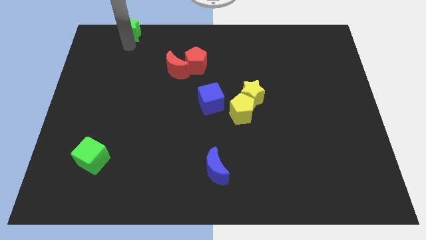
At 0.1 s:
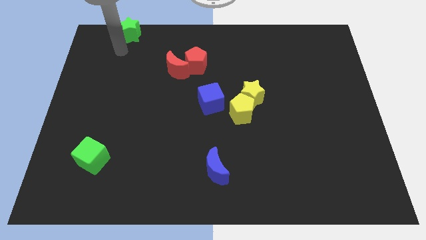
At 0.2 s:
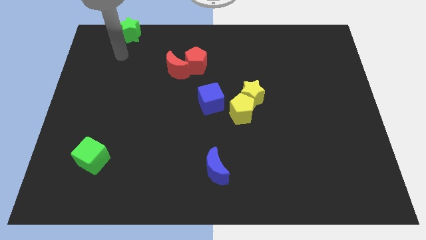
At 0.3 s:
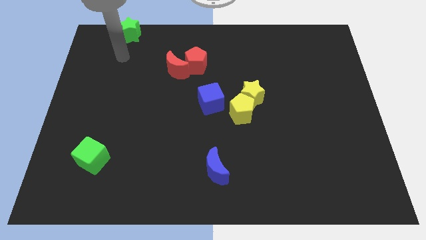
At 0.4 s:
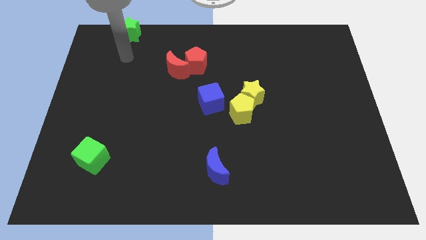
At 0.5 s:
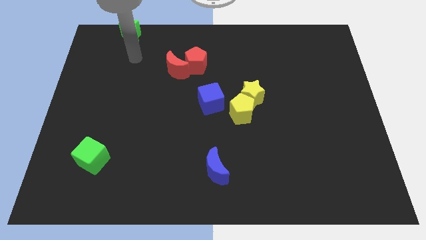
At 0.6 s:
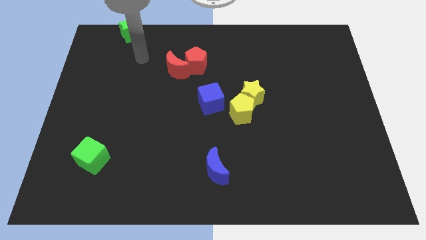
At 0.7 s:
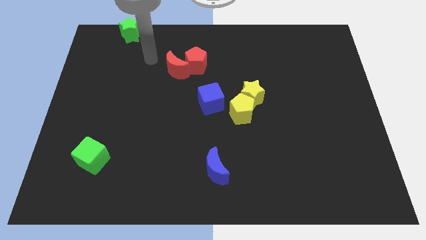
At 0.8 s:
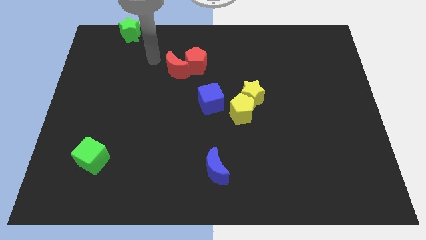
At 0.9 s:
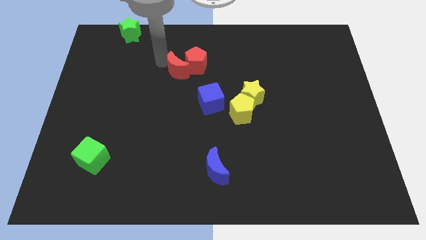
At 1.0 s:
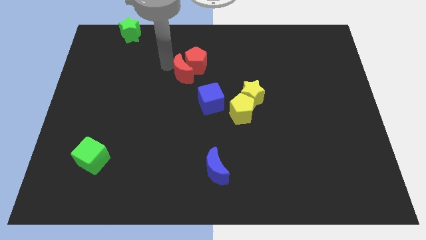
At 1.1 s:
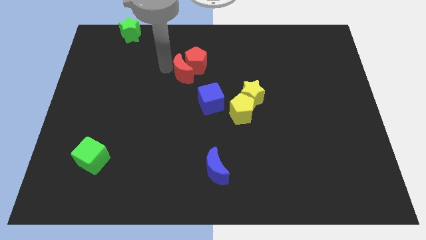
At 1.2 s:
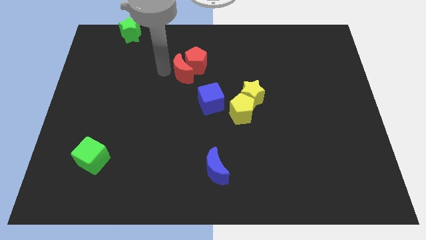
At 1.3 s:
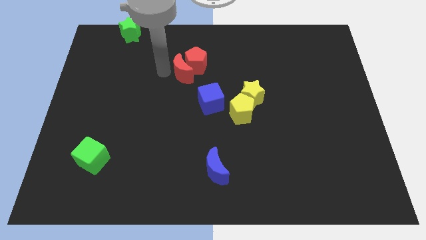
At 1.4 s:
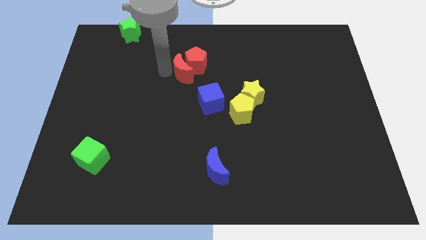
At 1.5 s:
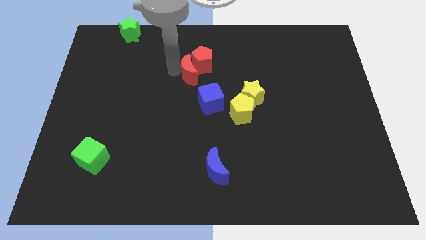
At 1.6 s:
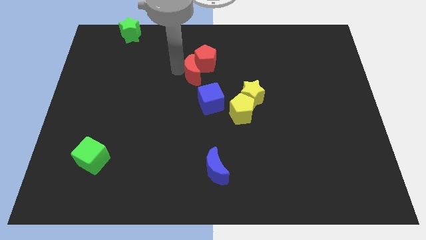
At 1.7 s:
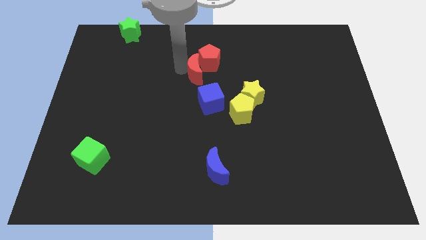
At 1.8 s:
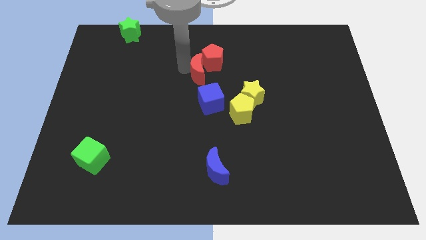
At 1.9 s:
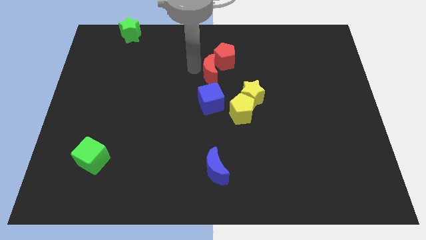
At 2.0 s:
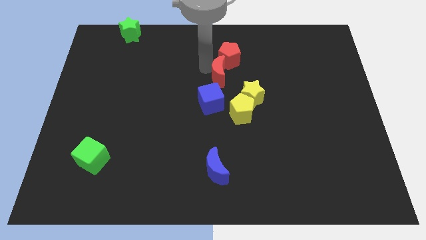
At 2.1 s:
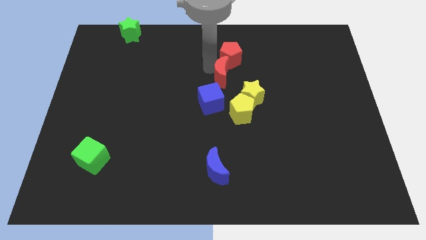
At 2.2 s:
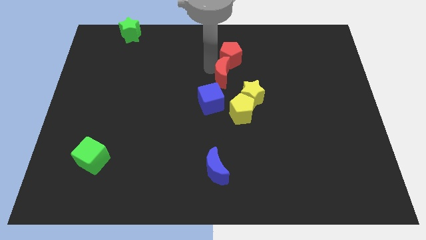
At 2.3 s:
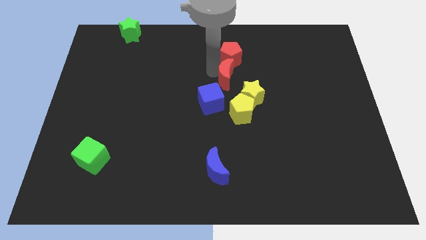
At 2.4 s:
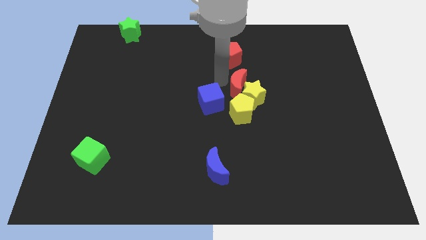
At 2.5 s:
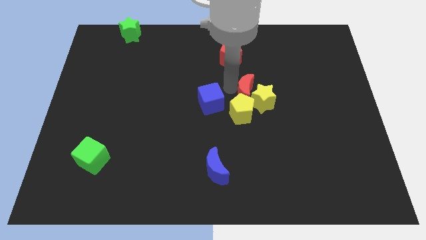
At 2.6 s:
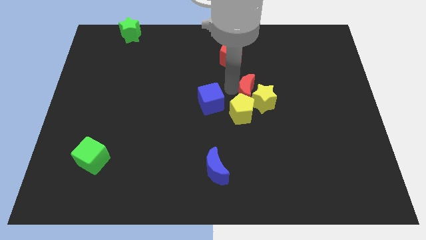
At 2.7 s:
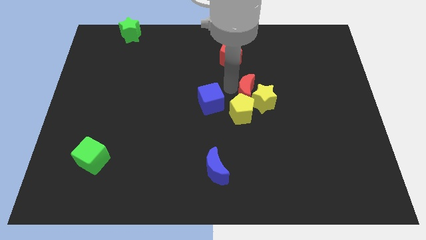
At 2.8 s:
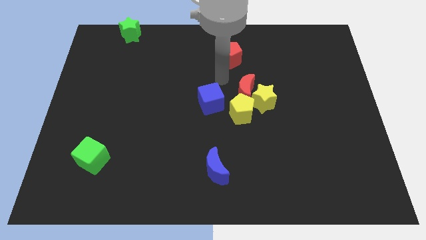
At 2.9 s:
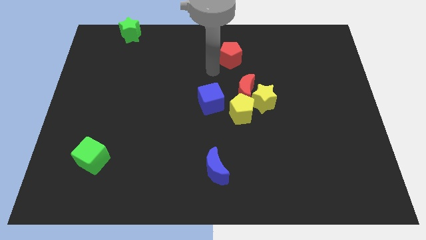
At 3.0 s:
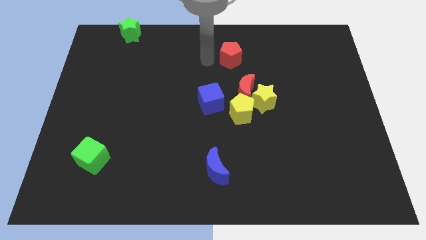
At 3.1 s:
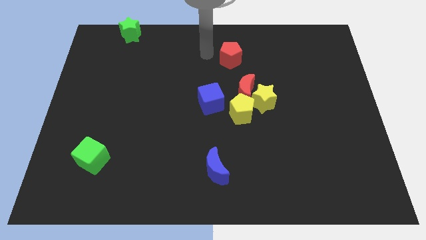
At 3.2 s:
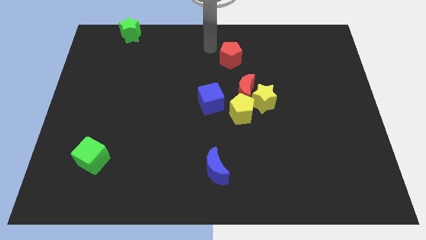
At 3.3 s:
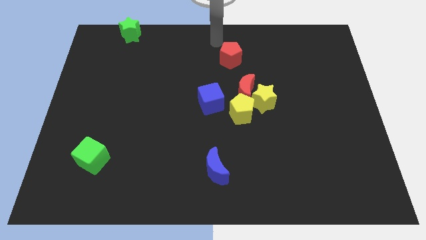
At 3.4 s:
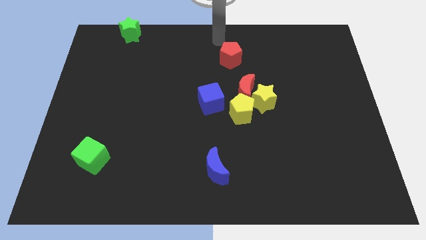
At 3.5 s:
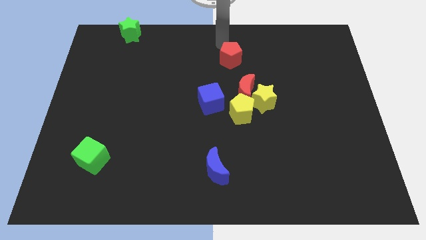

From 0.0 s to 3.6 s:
push the red moon into the yellow blocks

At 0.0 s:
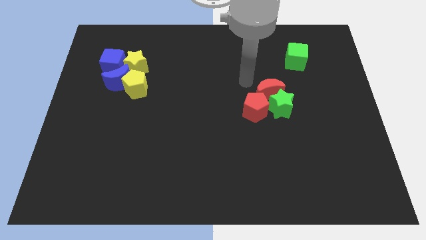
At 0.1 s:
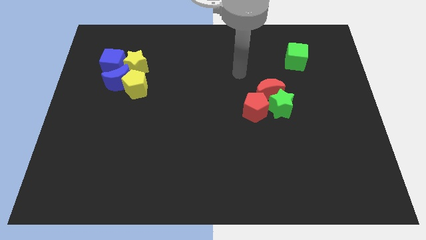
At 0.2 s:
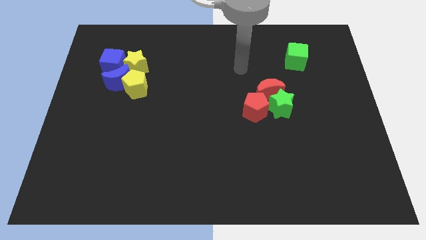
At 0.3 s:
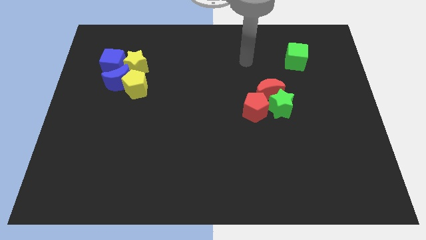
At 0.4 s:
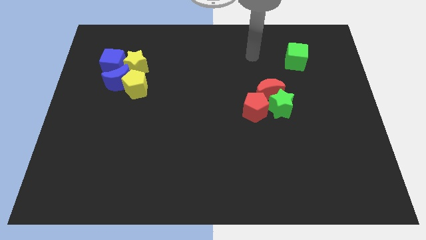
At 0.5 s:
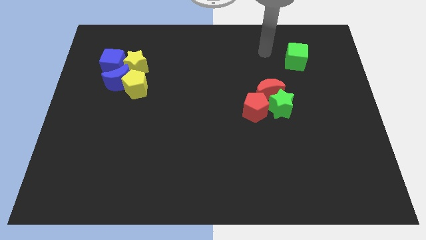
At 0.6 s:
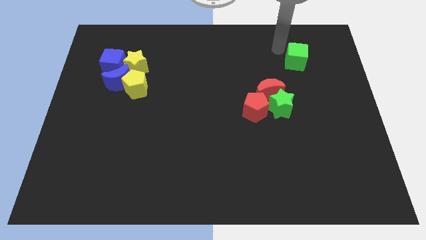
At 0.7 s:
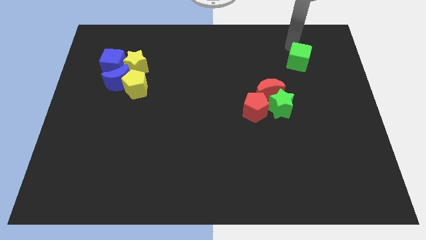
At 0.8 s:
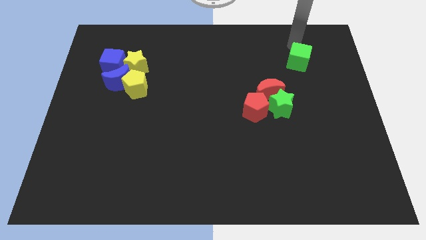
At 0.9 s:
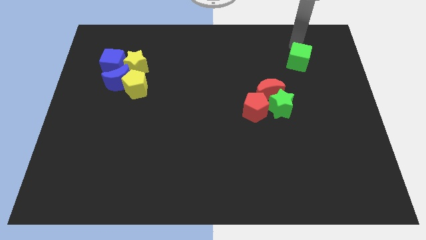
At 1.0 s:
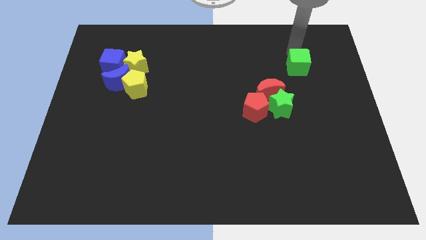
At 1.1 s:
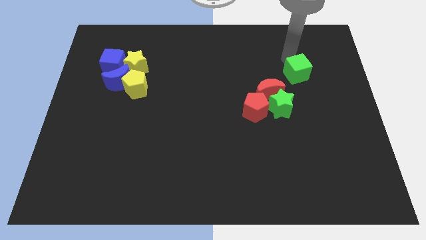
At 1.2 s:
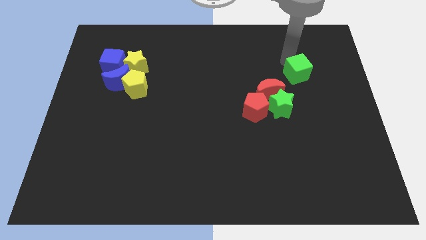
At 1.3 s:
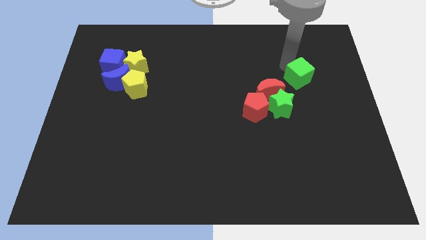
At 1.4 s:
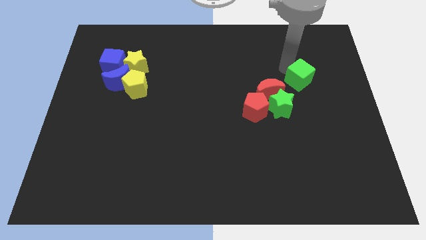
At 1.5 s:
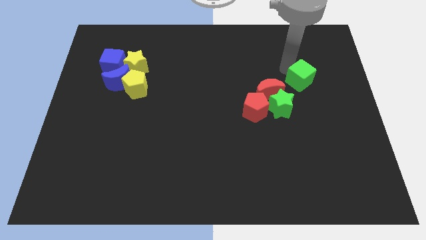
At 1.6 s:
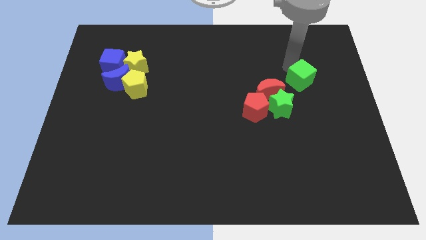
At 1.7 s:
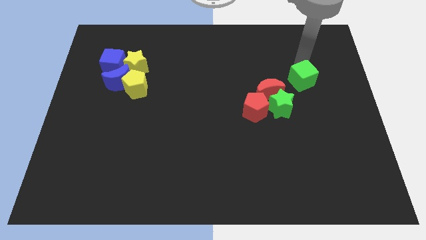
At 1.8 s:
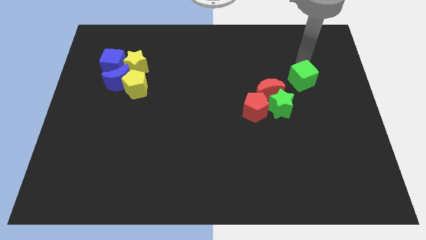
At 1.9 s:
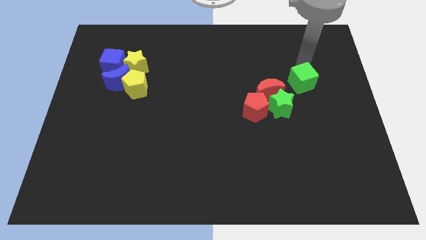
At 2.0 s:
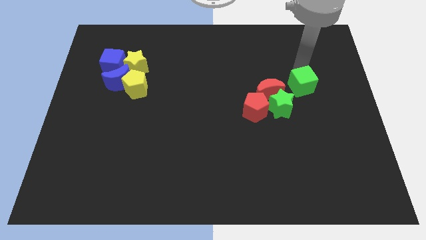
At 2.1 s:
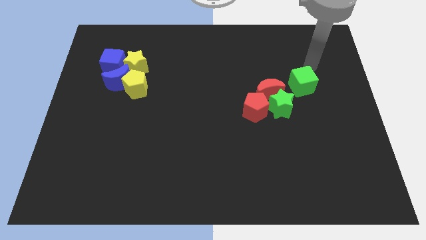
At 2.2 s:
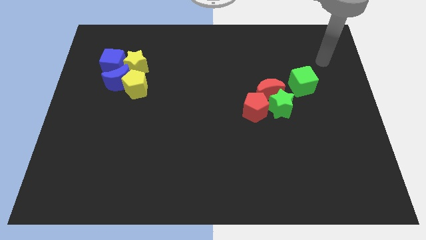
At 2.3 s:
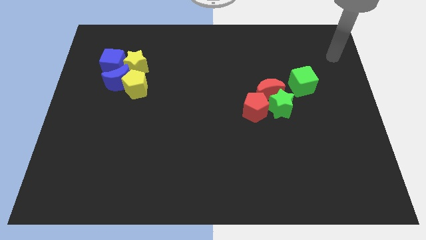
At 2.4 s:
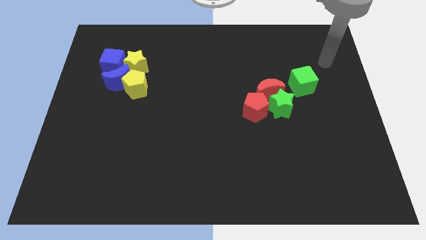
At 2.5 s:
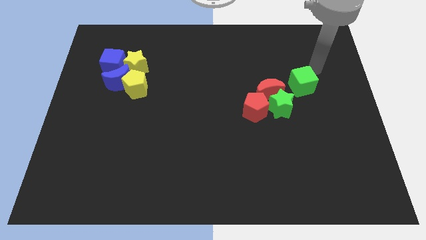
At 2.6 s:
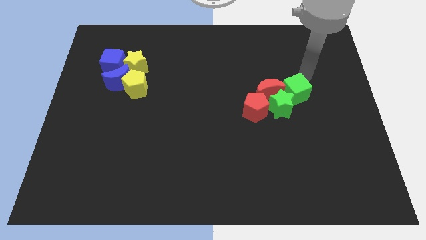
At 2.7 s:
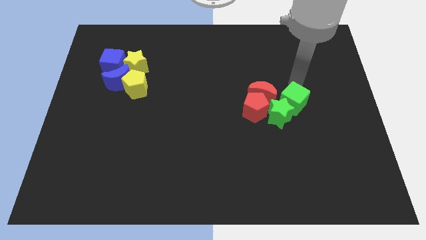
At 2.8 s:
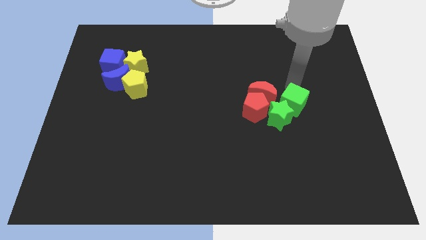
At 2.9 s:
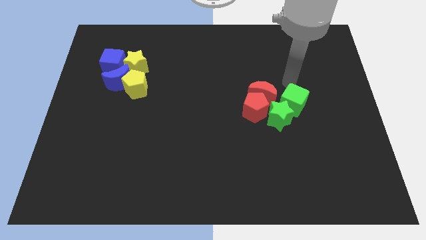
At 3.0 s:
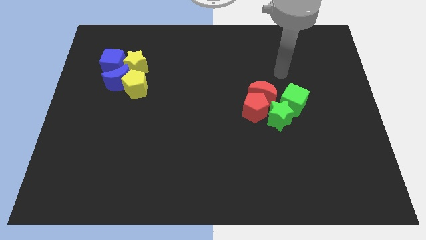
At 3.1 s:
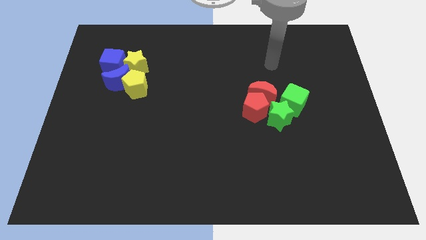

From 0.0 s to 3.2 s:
move the green cube above the green star

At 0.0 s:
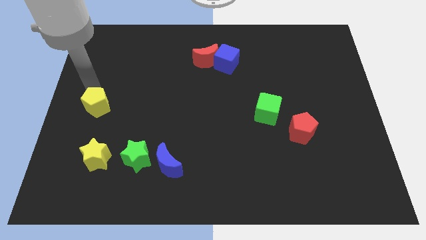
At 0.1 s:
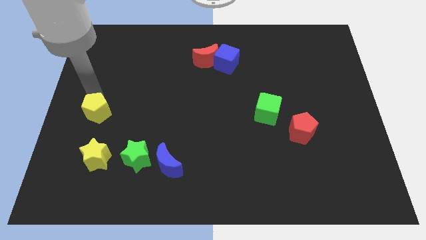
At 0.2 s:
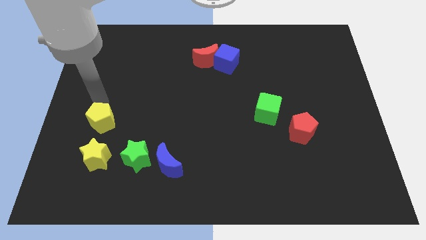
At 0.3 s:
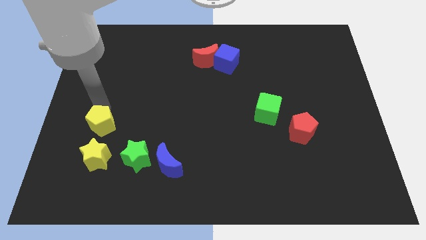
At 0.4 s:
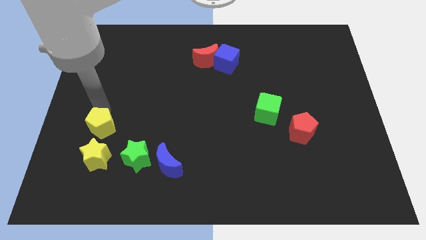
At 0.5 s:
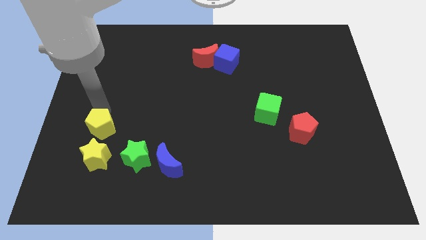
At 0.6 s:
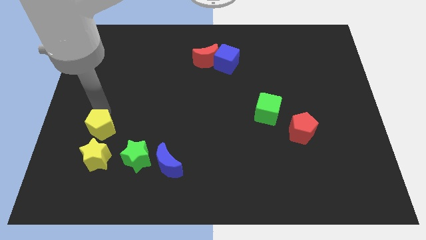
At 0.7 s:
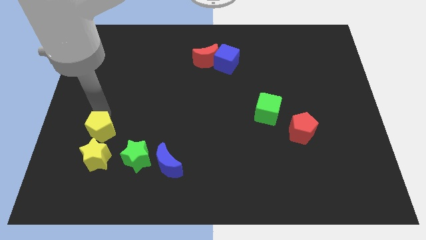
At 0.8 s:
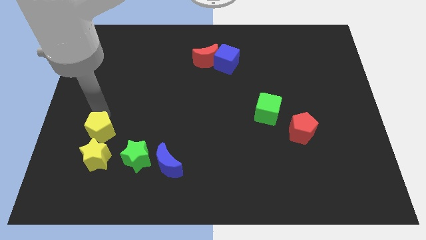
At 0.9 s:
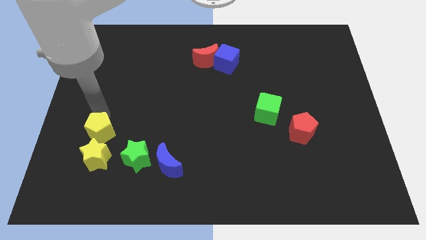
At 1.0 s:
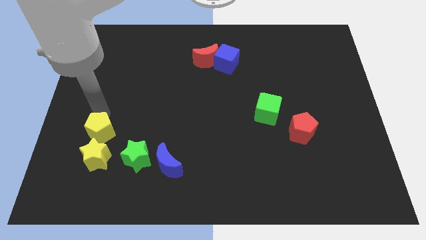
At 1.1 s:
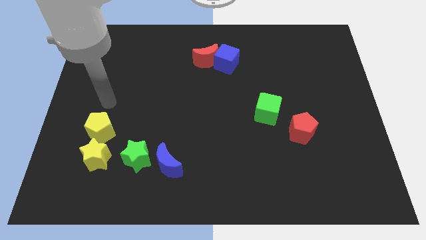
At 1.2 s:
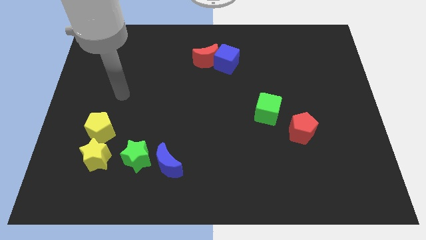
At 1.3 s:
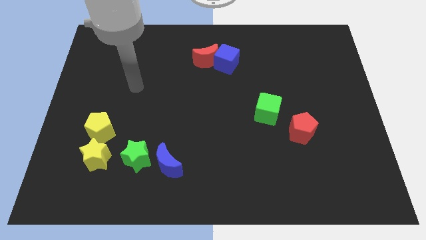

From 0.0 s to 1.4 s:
place yellow pentagon on the top of yellow star

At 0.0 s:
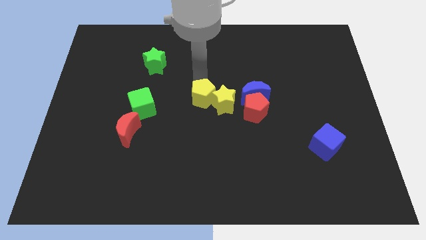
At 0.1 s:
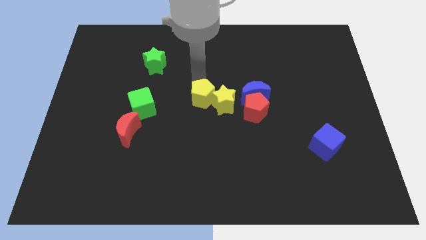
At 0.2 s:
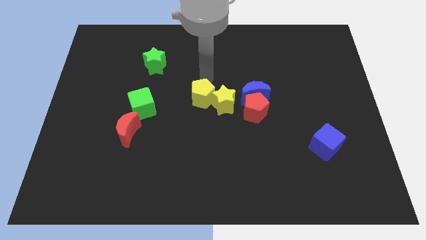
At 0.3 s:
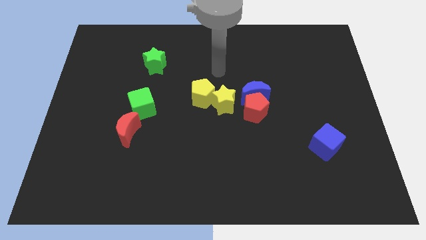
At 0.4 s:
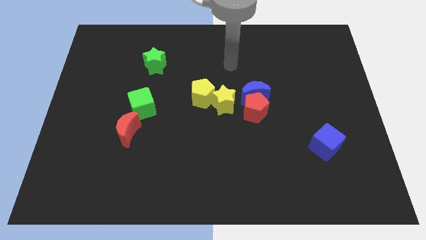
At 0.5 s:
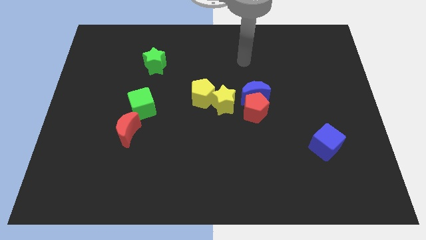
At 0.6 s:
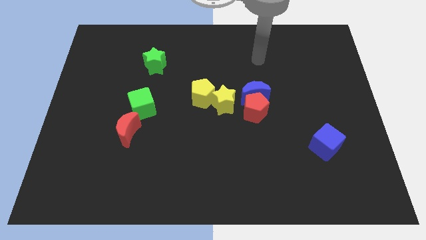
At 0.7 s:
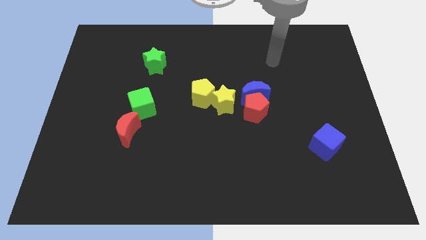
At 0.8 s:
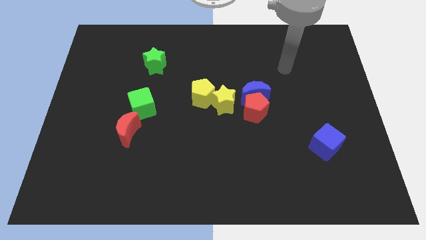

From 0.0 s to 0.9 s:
move the arm away from the yellow pentagon

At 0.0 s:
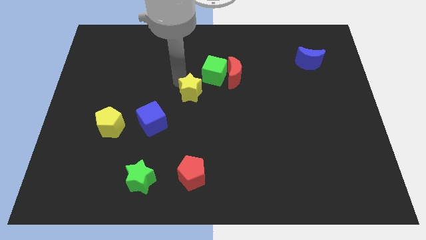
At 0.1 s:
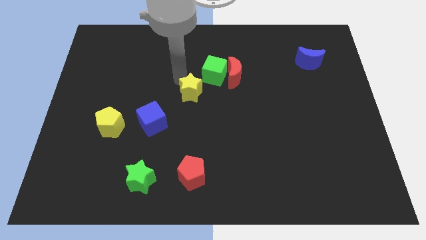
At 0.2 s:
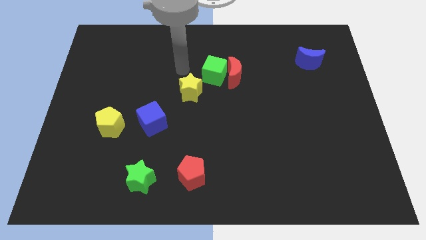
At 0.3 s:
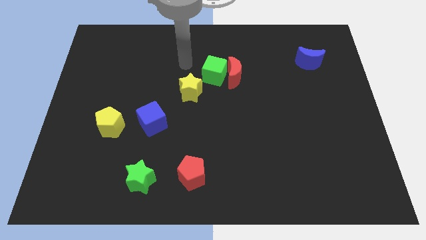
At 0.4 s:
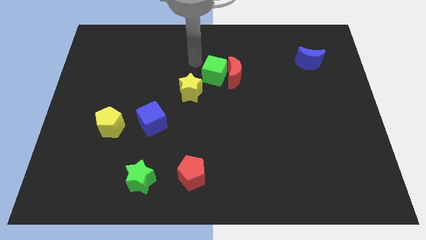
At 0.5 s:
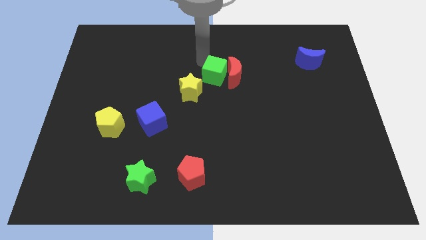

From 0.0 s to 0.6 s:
move your arm away from the yellow star
